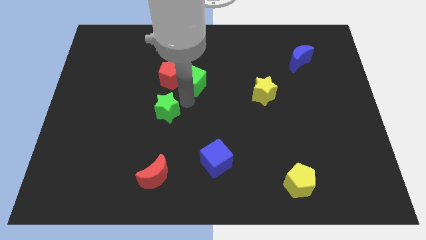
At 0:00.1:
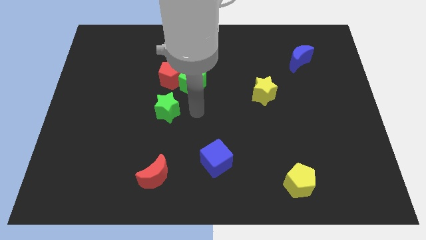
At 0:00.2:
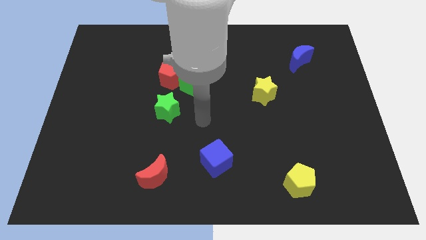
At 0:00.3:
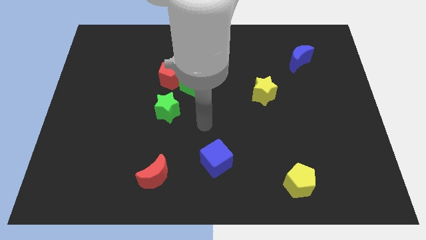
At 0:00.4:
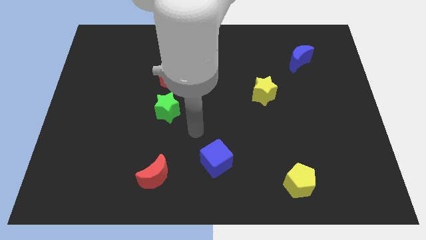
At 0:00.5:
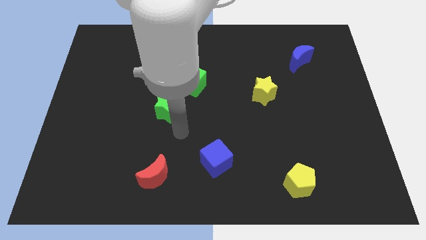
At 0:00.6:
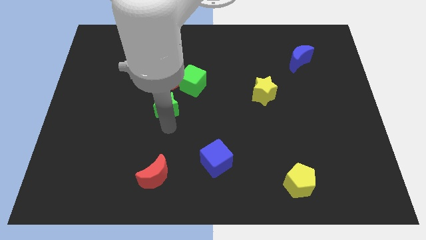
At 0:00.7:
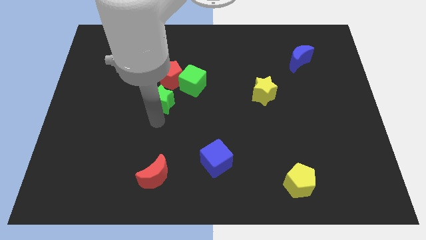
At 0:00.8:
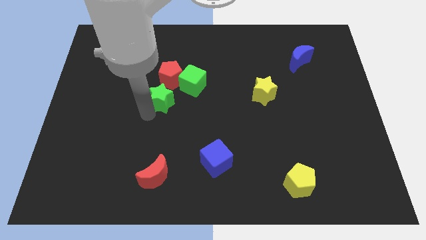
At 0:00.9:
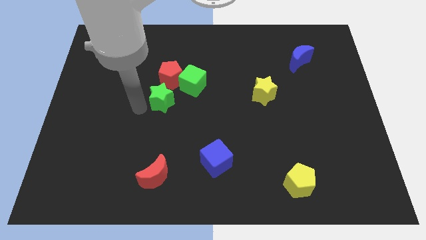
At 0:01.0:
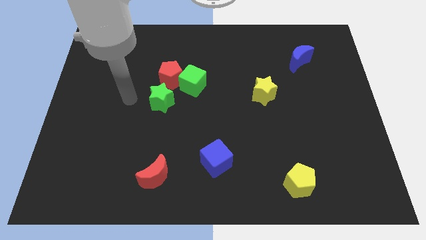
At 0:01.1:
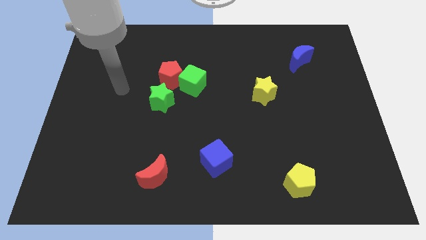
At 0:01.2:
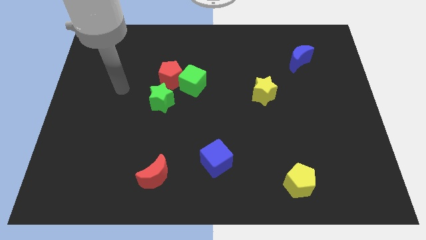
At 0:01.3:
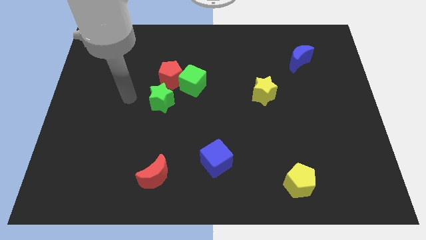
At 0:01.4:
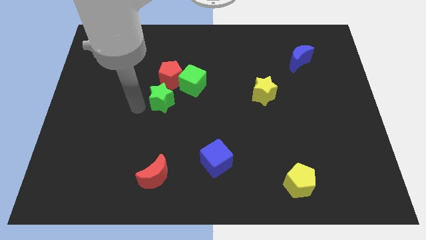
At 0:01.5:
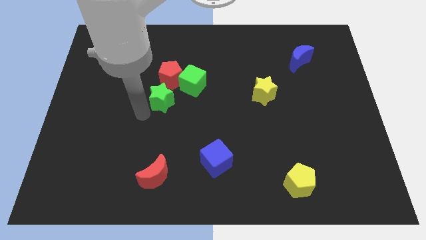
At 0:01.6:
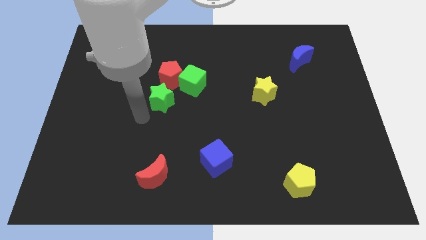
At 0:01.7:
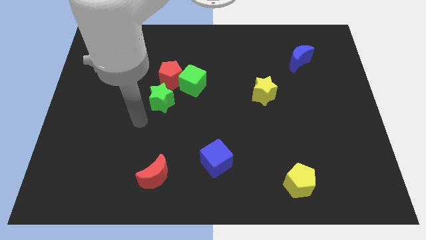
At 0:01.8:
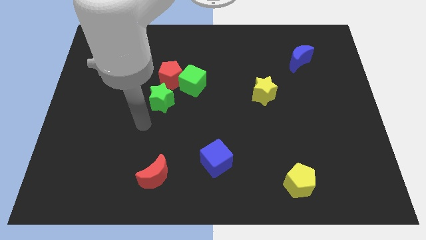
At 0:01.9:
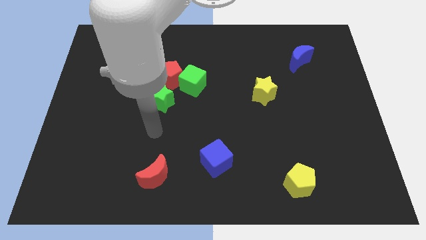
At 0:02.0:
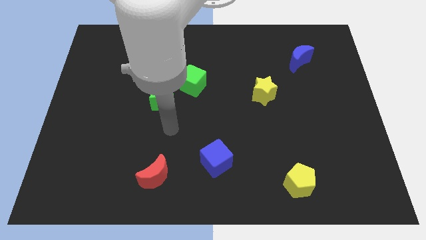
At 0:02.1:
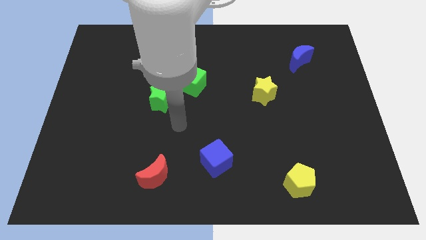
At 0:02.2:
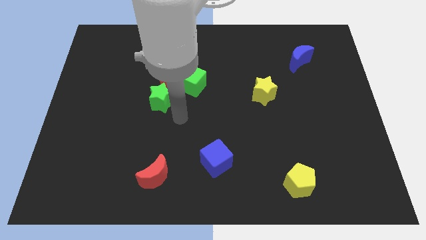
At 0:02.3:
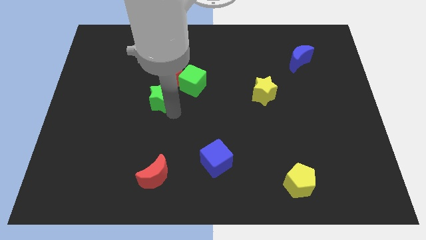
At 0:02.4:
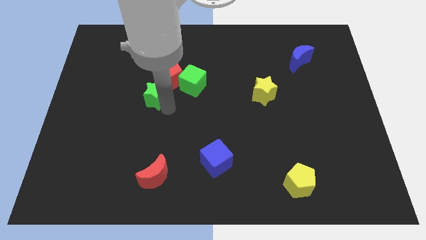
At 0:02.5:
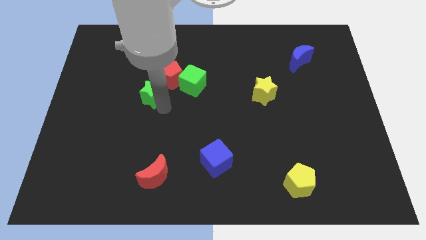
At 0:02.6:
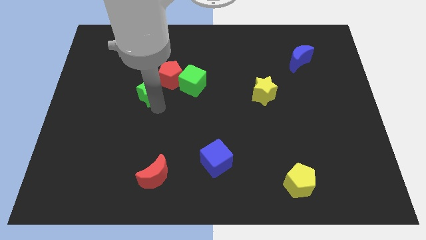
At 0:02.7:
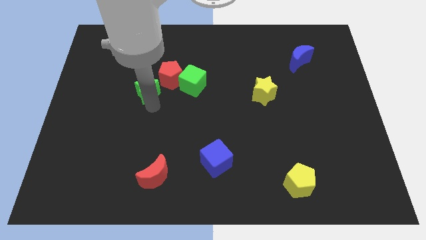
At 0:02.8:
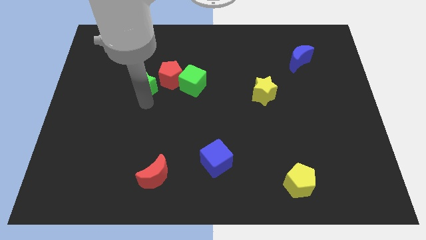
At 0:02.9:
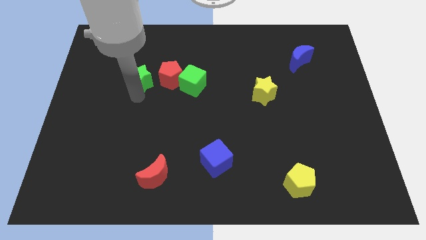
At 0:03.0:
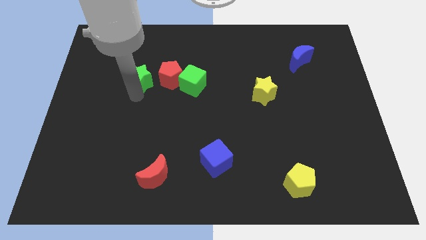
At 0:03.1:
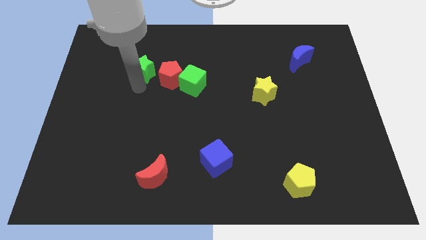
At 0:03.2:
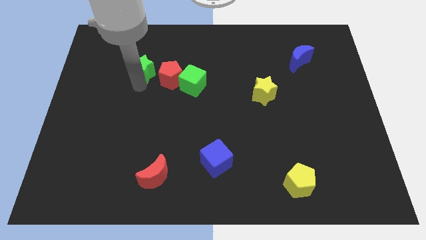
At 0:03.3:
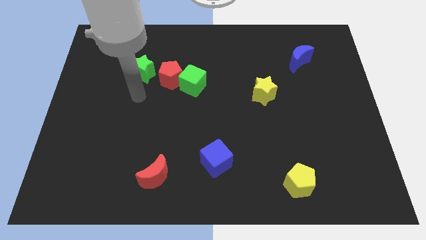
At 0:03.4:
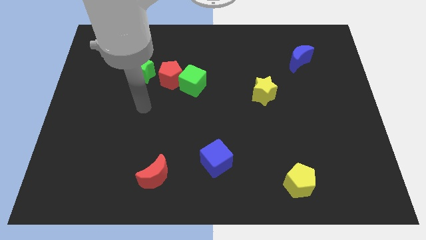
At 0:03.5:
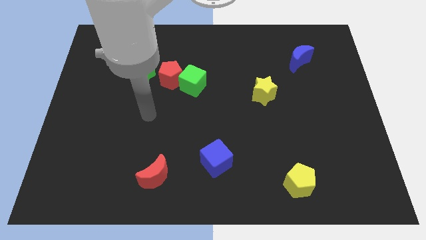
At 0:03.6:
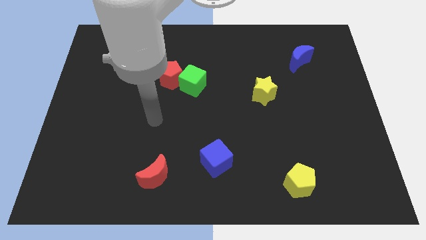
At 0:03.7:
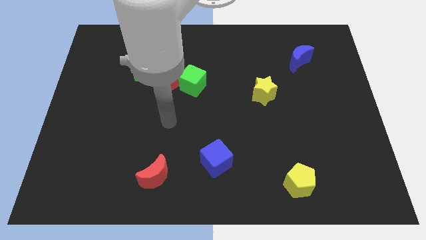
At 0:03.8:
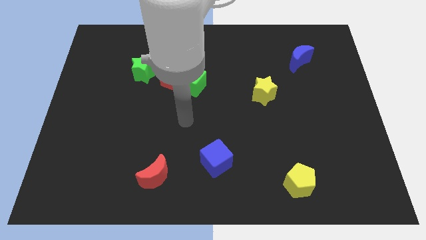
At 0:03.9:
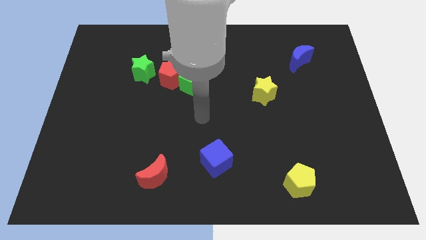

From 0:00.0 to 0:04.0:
place the green star left to the red pentagon

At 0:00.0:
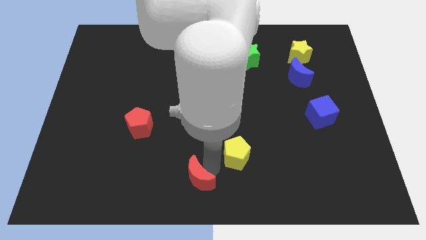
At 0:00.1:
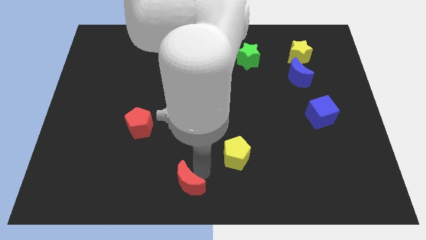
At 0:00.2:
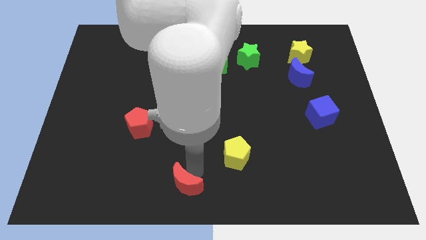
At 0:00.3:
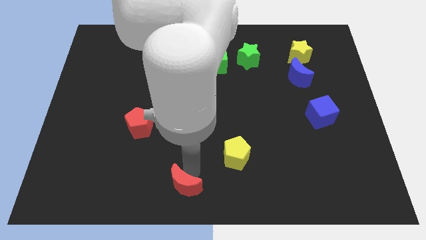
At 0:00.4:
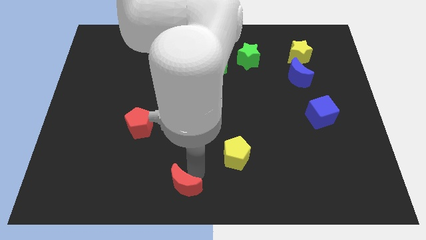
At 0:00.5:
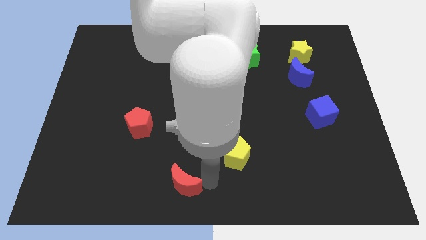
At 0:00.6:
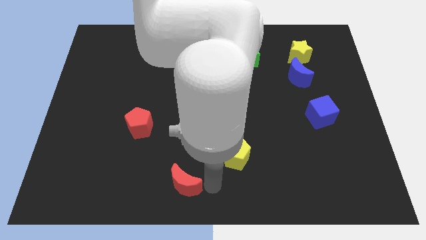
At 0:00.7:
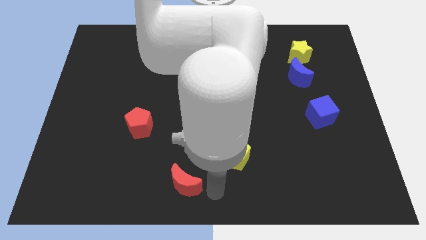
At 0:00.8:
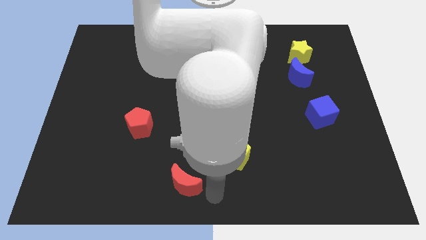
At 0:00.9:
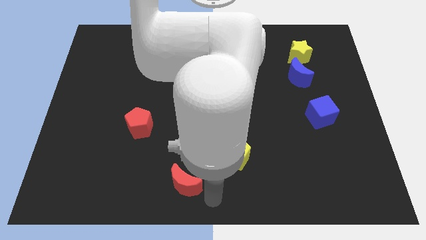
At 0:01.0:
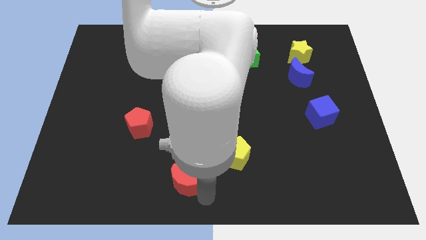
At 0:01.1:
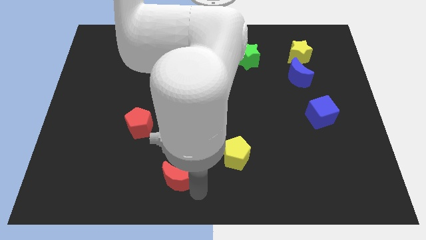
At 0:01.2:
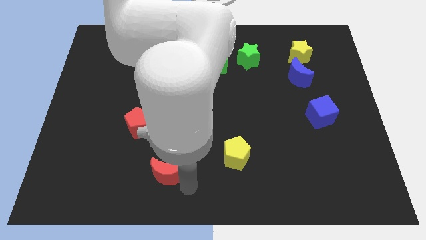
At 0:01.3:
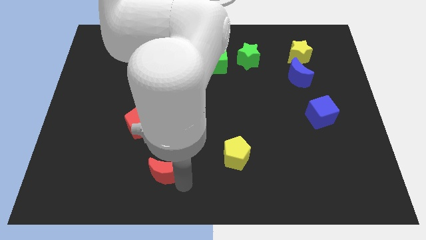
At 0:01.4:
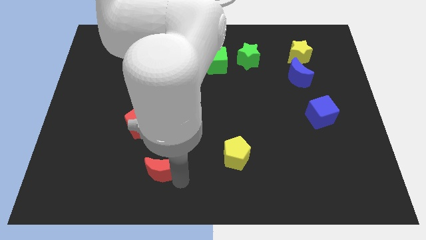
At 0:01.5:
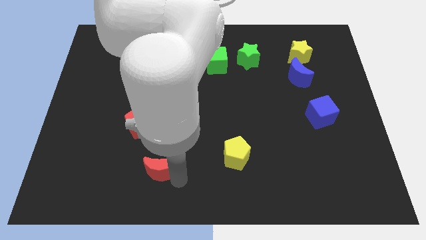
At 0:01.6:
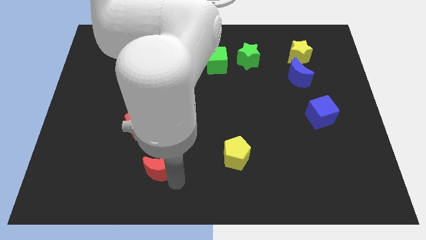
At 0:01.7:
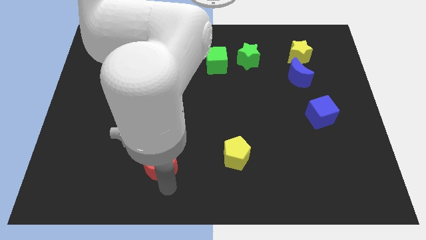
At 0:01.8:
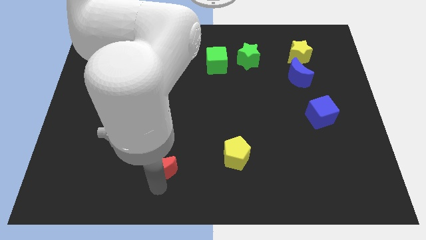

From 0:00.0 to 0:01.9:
move red moon towards left

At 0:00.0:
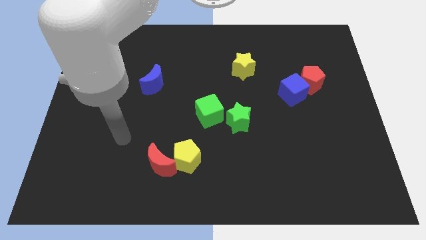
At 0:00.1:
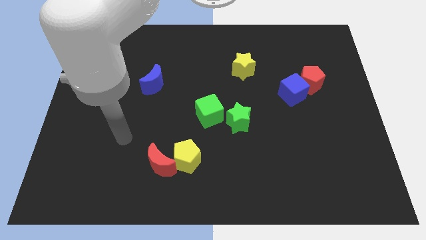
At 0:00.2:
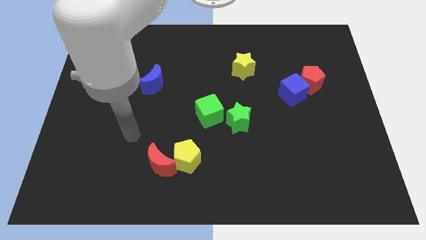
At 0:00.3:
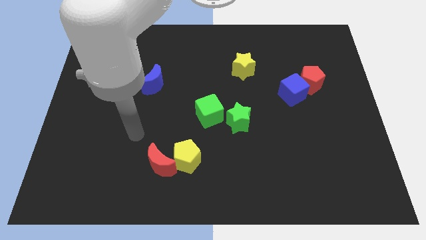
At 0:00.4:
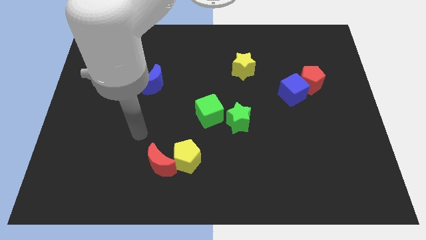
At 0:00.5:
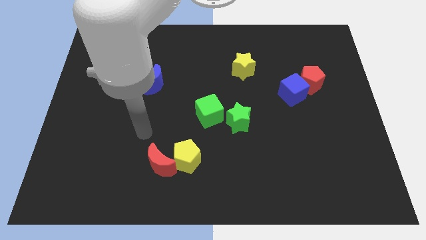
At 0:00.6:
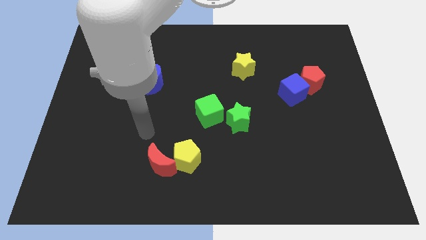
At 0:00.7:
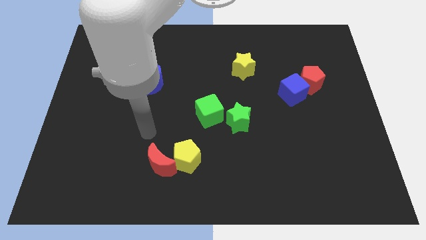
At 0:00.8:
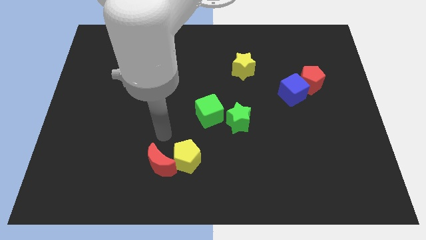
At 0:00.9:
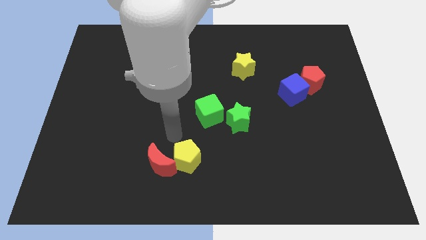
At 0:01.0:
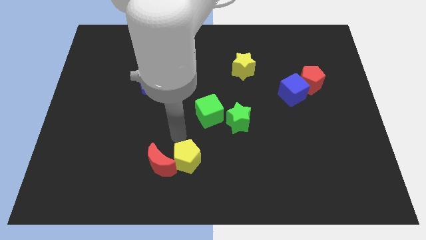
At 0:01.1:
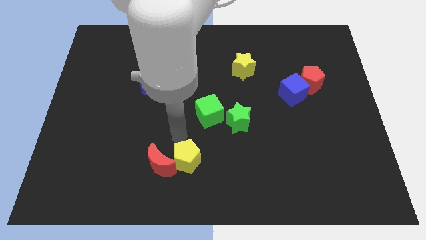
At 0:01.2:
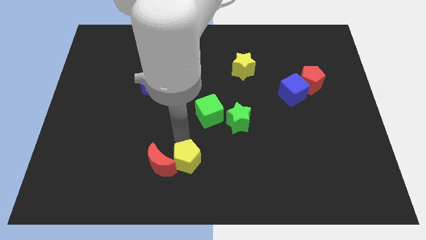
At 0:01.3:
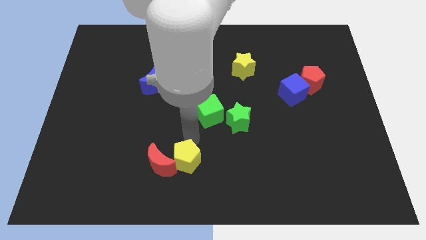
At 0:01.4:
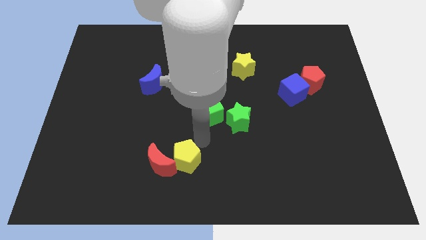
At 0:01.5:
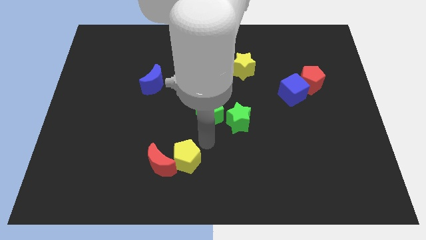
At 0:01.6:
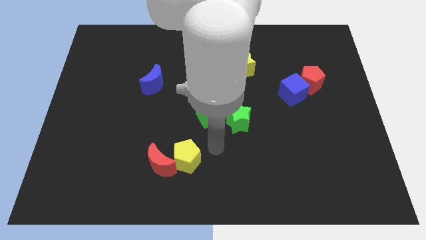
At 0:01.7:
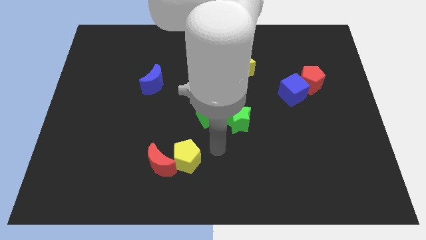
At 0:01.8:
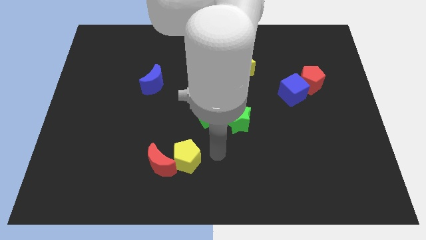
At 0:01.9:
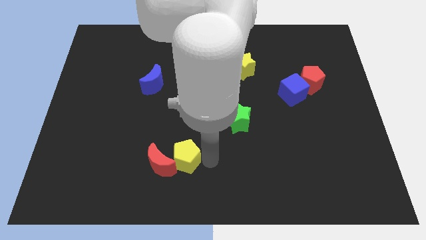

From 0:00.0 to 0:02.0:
point your arm to the right of the yellow pentagon

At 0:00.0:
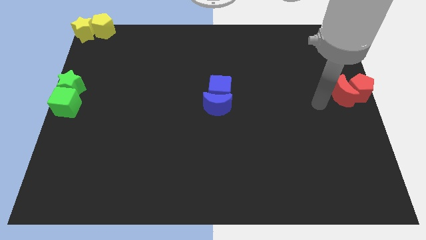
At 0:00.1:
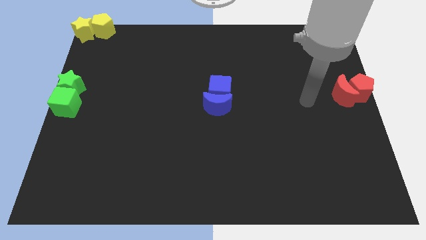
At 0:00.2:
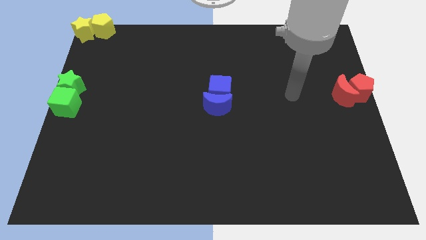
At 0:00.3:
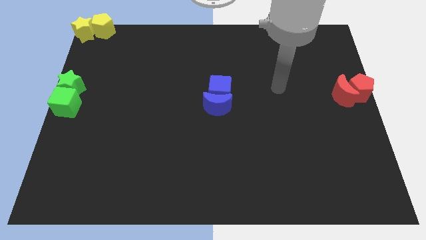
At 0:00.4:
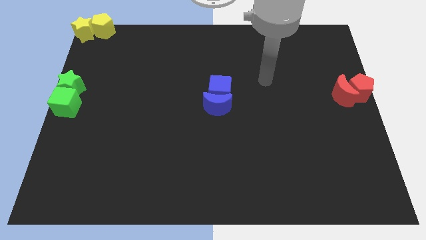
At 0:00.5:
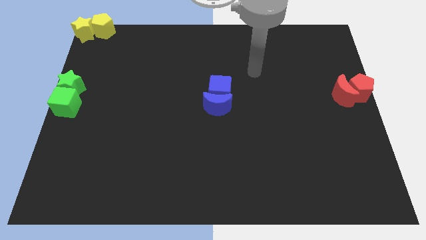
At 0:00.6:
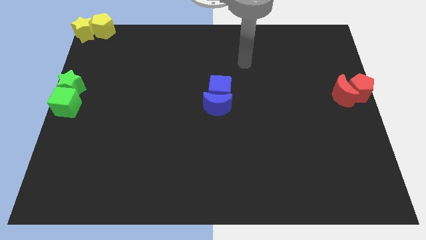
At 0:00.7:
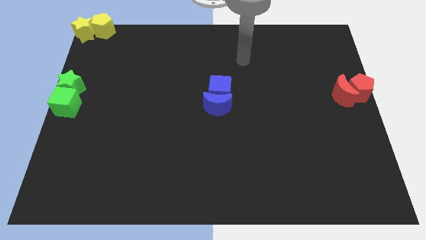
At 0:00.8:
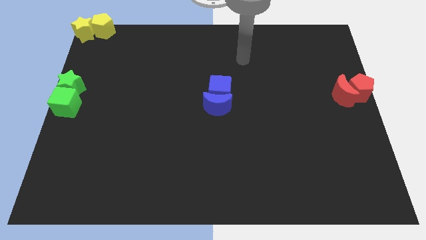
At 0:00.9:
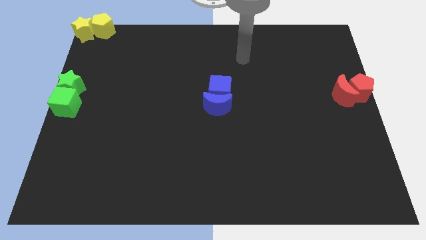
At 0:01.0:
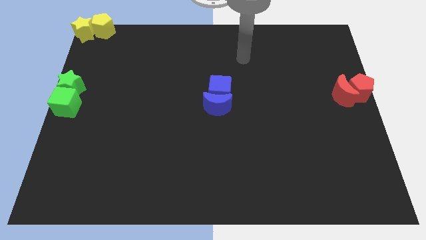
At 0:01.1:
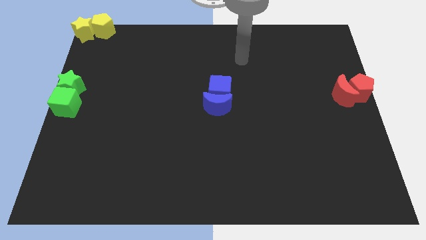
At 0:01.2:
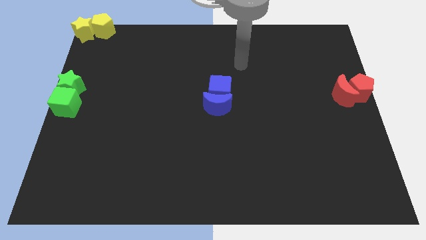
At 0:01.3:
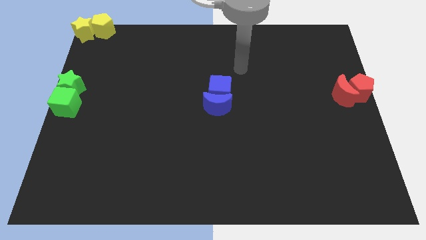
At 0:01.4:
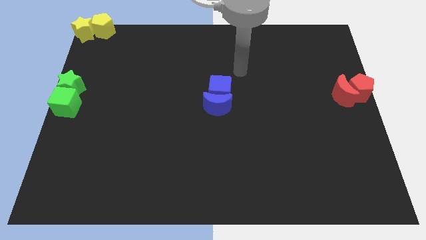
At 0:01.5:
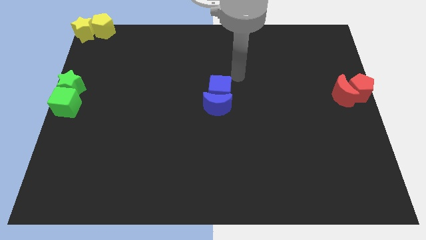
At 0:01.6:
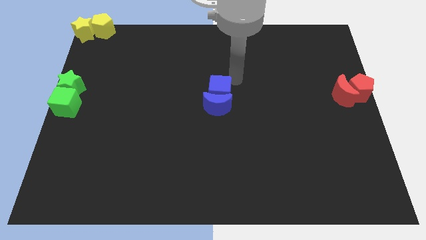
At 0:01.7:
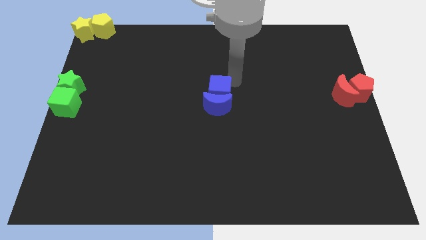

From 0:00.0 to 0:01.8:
move your arm away from red blocks
